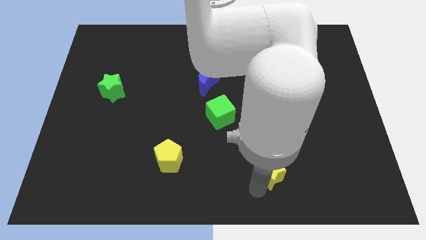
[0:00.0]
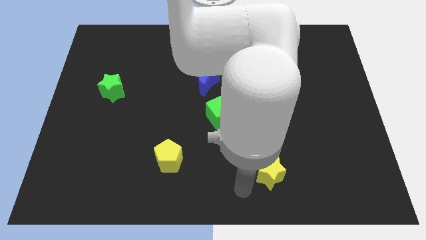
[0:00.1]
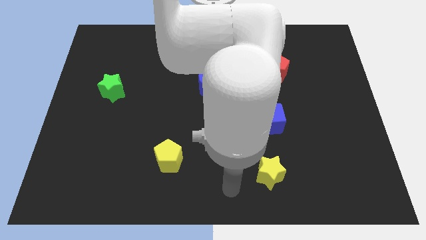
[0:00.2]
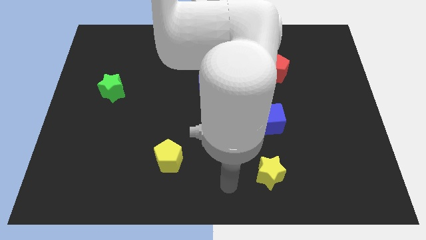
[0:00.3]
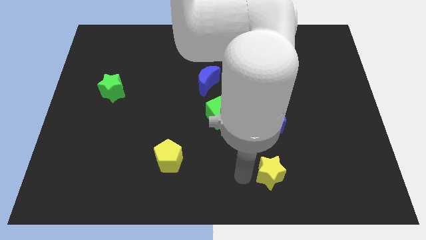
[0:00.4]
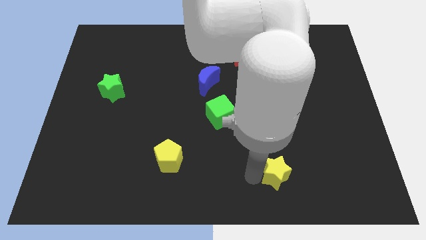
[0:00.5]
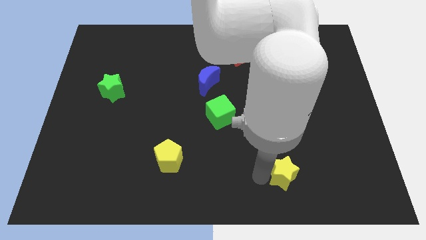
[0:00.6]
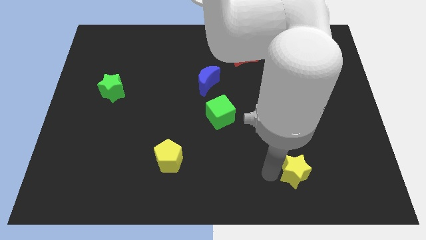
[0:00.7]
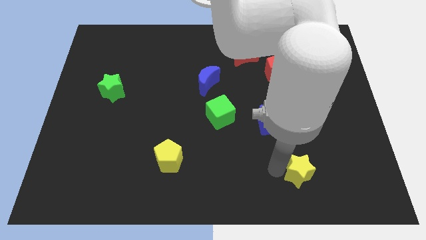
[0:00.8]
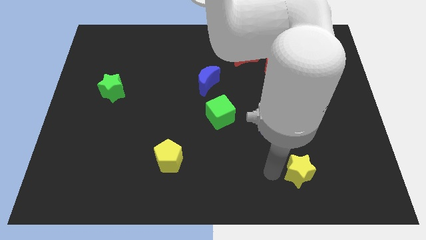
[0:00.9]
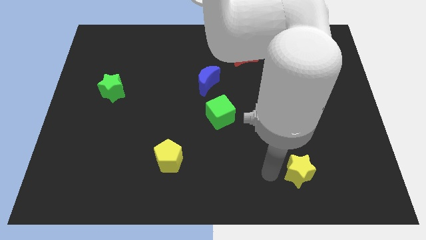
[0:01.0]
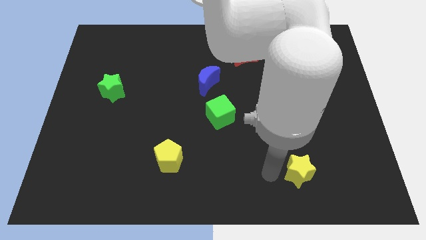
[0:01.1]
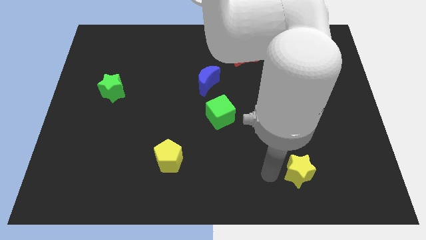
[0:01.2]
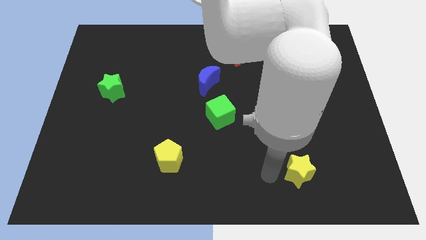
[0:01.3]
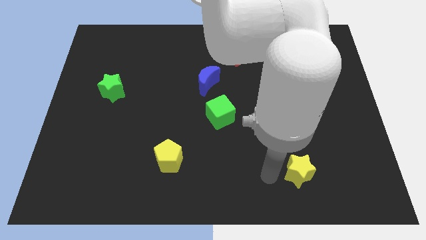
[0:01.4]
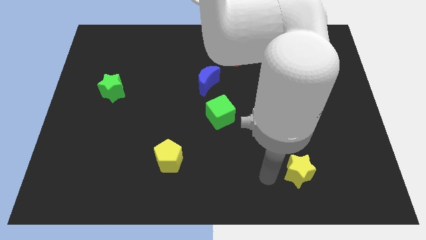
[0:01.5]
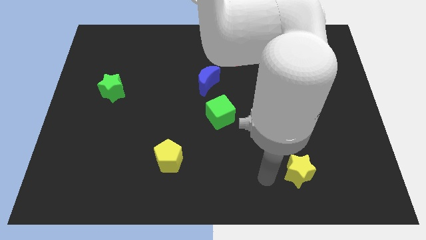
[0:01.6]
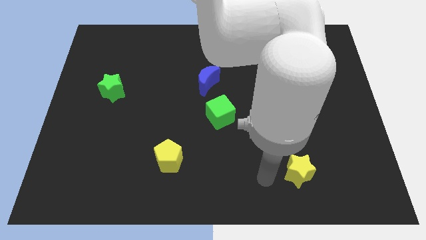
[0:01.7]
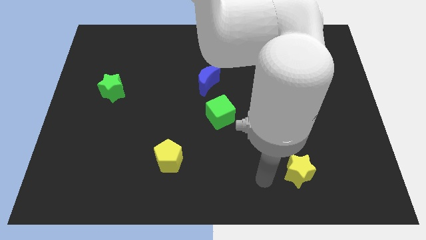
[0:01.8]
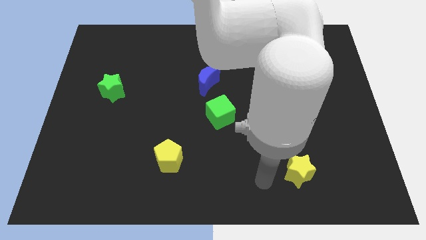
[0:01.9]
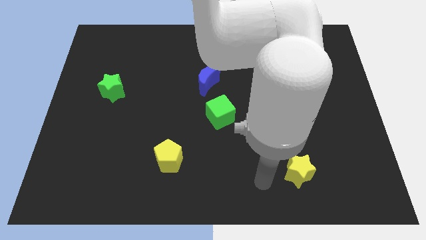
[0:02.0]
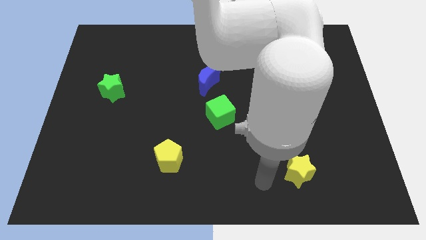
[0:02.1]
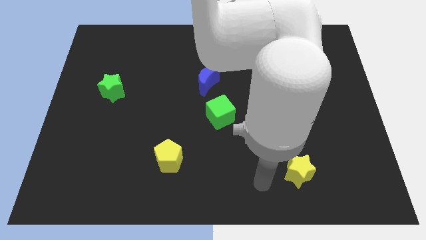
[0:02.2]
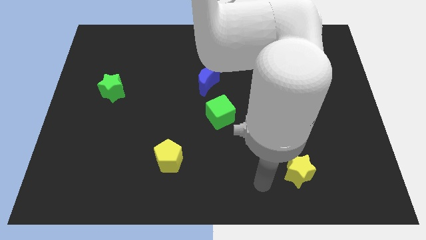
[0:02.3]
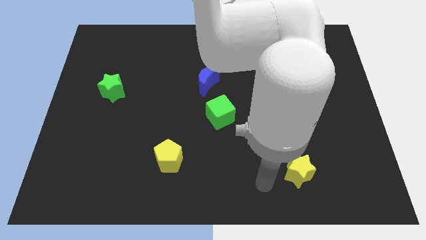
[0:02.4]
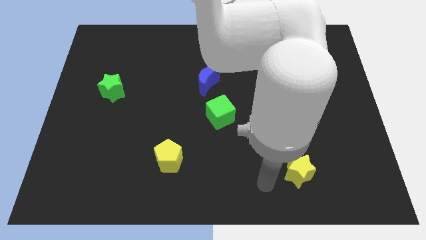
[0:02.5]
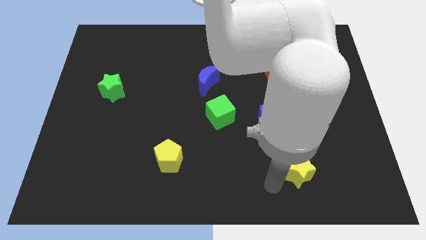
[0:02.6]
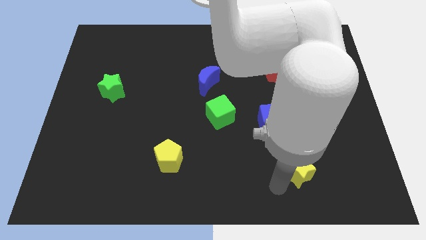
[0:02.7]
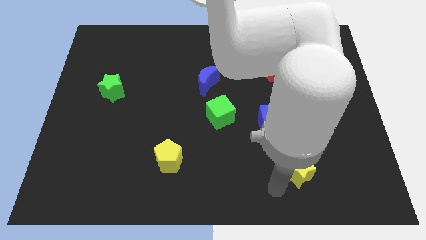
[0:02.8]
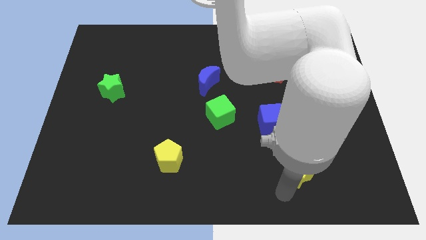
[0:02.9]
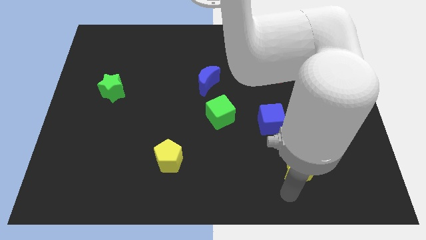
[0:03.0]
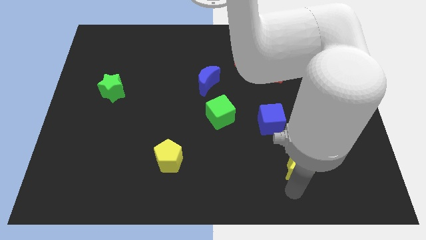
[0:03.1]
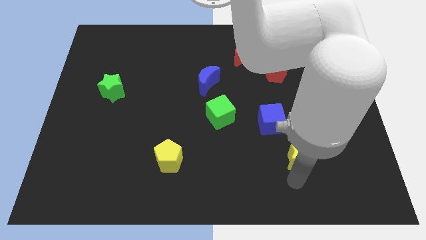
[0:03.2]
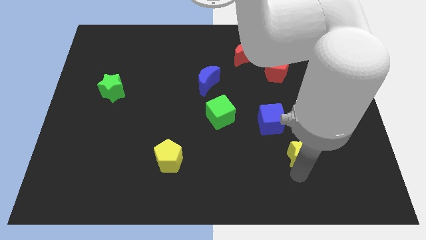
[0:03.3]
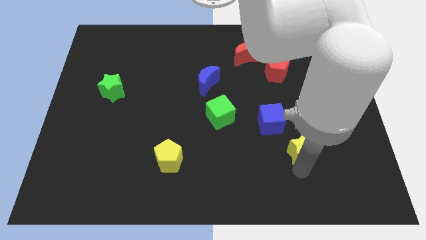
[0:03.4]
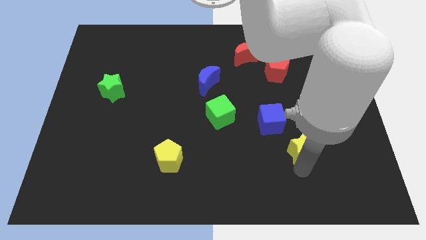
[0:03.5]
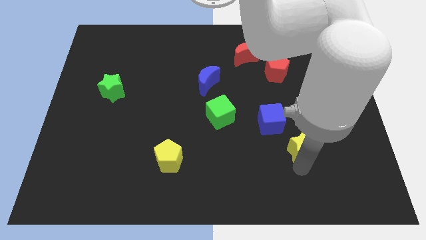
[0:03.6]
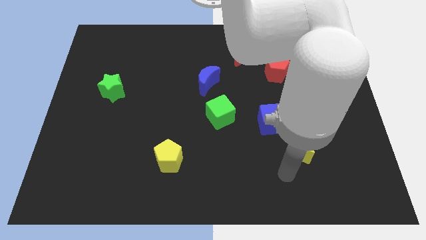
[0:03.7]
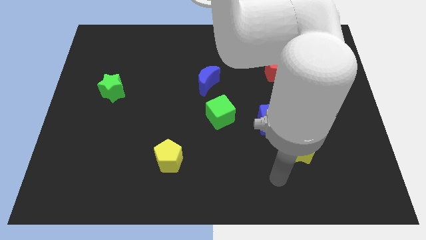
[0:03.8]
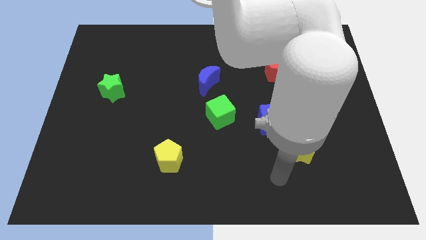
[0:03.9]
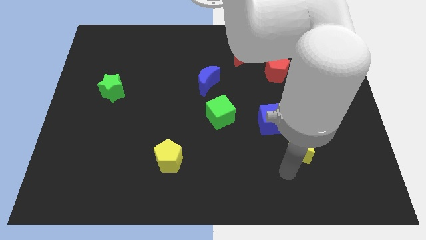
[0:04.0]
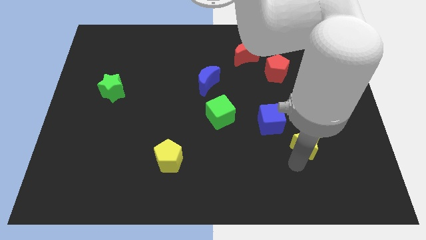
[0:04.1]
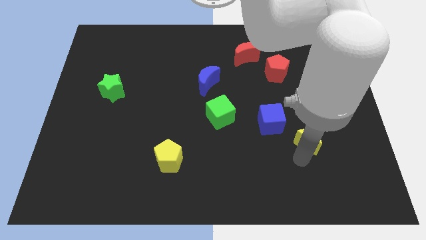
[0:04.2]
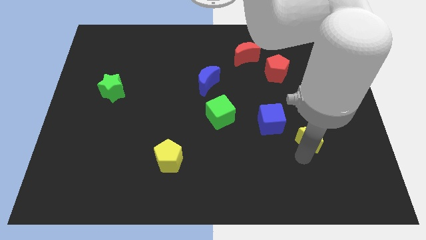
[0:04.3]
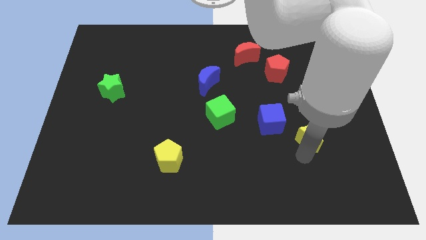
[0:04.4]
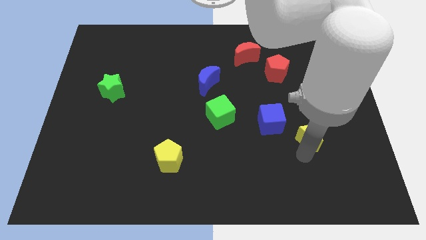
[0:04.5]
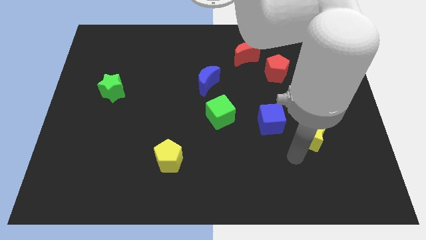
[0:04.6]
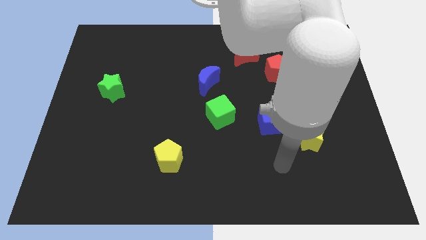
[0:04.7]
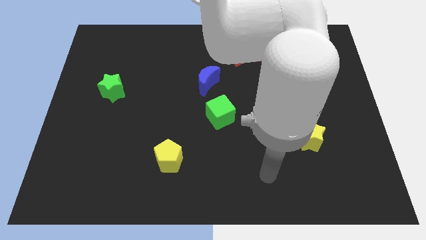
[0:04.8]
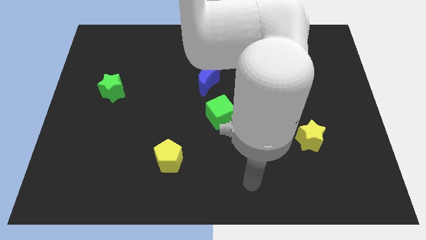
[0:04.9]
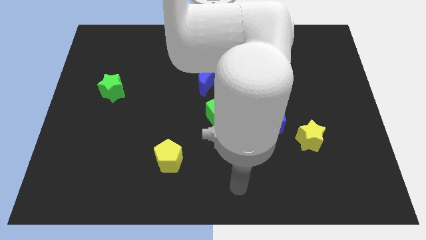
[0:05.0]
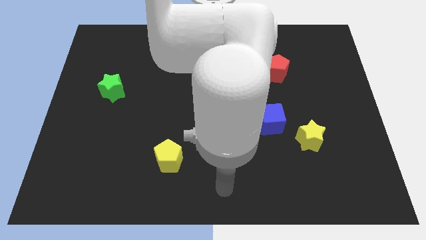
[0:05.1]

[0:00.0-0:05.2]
push yellow star to the bottom right of blue cube

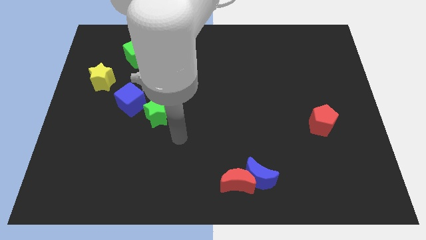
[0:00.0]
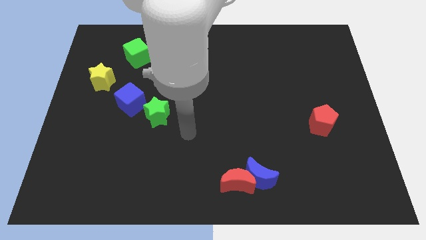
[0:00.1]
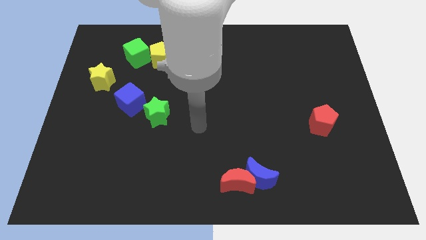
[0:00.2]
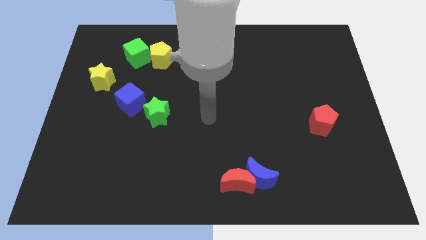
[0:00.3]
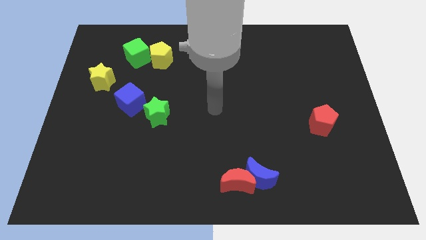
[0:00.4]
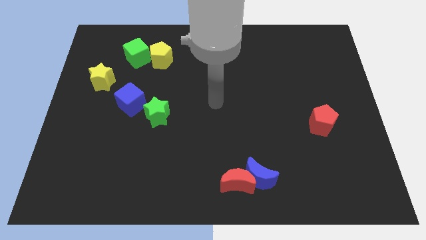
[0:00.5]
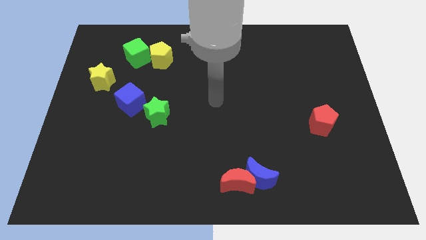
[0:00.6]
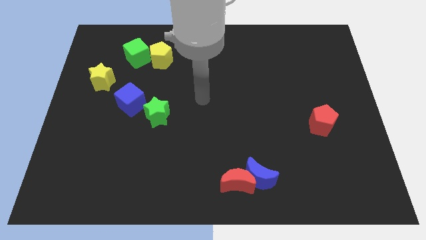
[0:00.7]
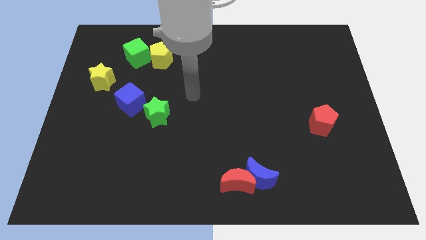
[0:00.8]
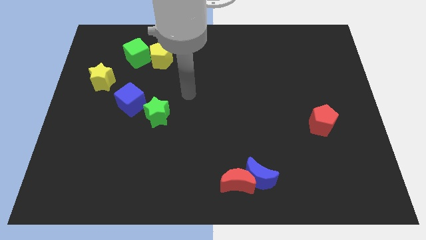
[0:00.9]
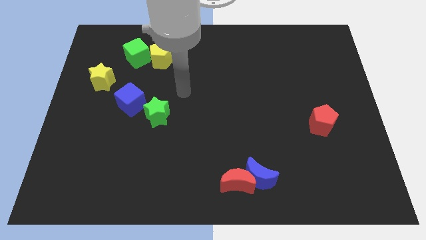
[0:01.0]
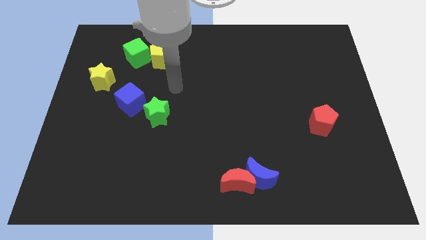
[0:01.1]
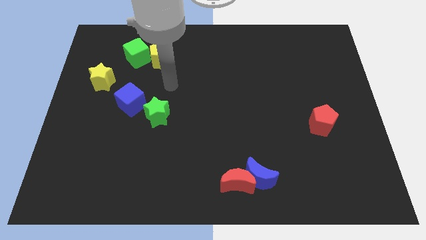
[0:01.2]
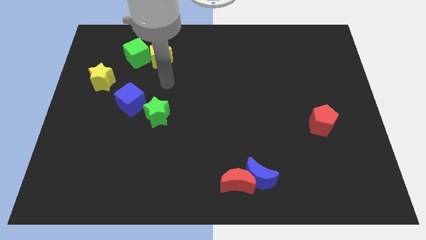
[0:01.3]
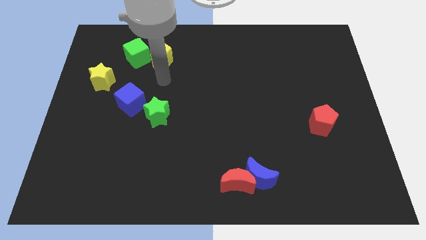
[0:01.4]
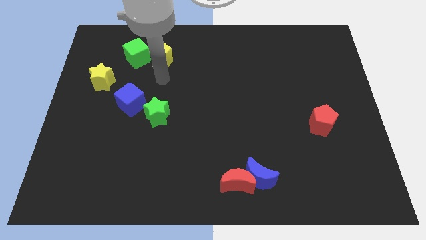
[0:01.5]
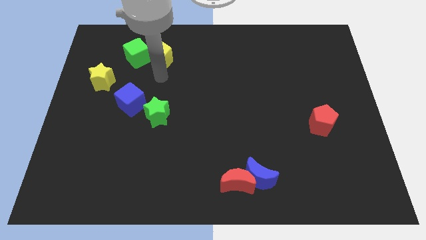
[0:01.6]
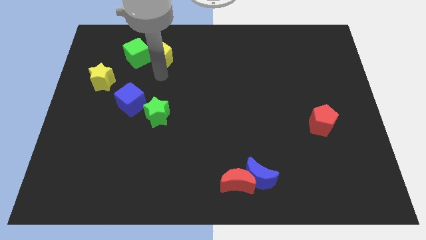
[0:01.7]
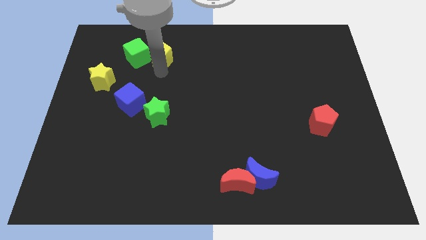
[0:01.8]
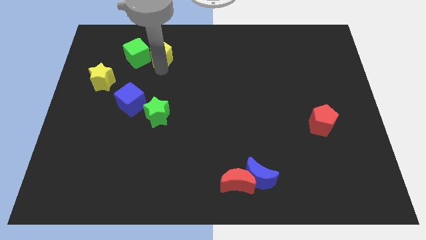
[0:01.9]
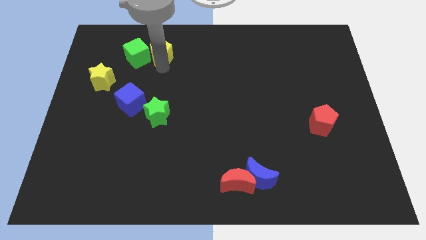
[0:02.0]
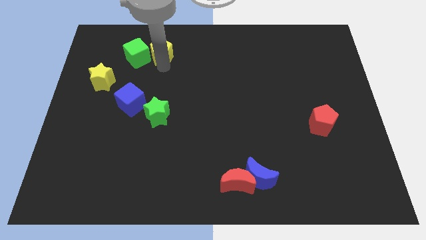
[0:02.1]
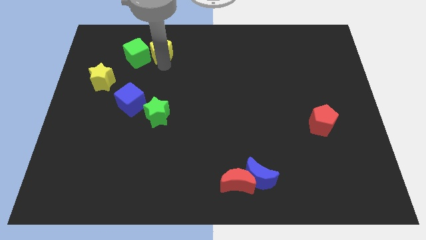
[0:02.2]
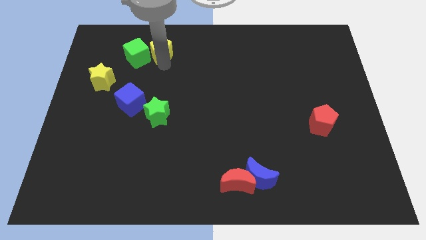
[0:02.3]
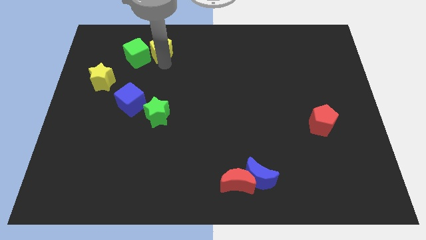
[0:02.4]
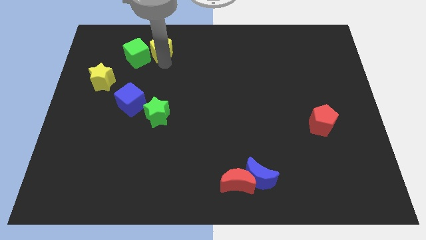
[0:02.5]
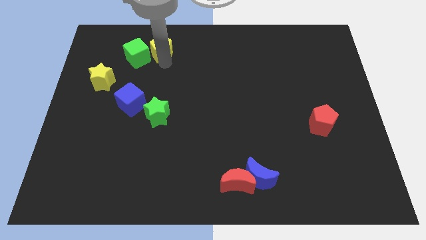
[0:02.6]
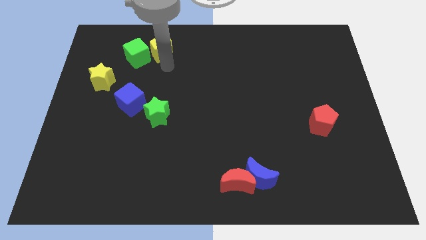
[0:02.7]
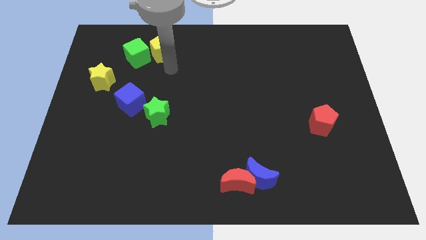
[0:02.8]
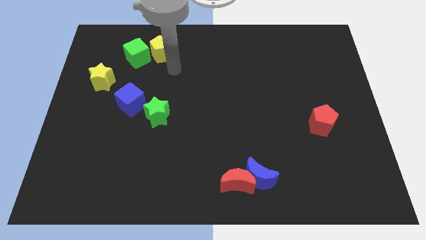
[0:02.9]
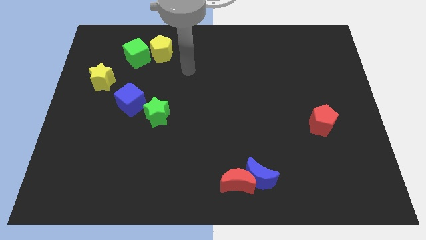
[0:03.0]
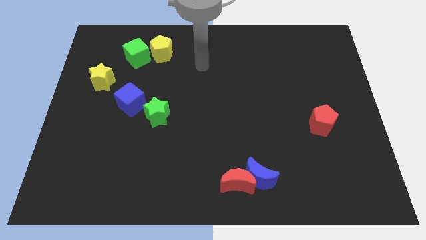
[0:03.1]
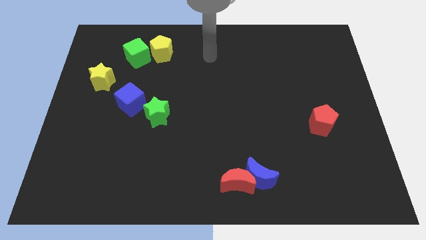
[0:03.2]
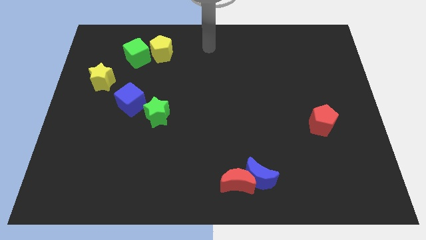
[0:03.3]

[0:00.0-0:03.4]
place yellow pentagon to the right of green cube

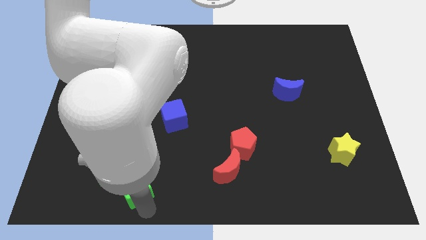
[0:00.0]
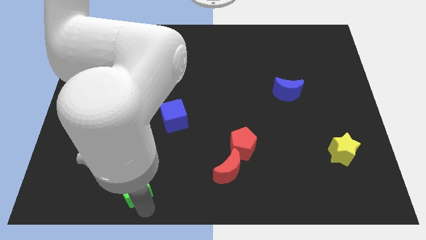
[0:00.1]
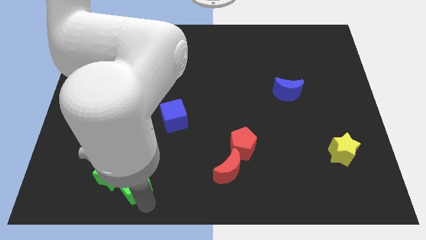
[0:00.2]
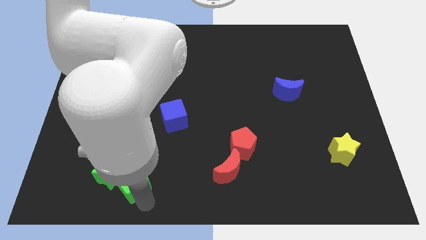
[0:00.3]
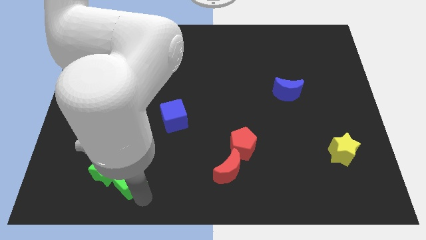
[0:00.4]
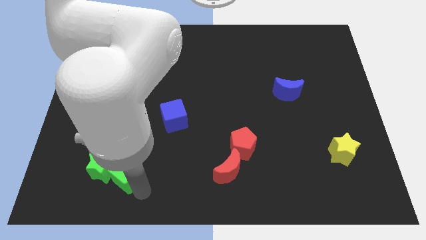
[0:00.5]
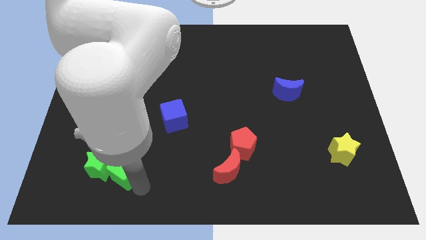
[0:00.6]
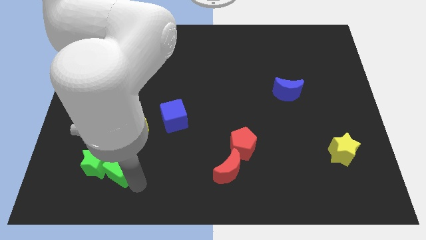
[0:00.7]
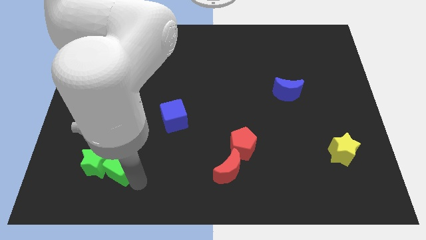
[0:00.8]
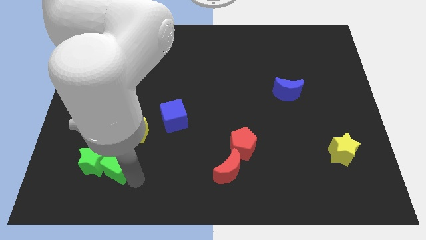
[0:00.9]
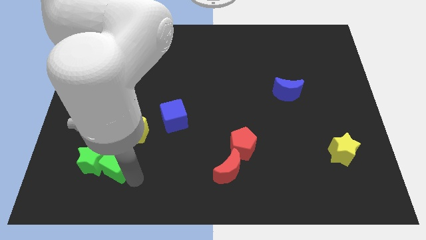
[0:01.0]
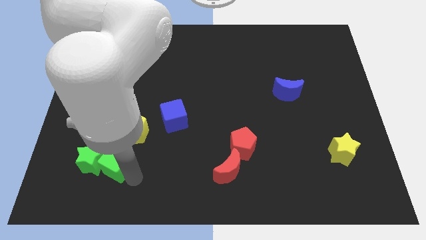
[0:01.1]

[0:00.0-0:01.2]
push the green blocks slightly to the top
